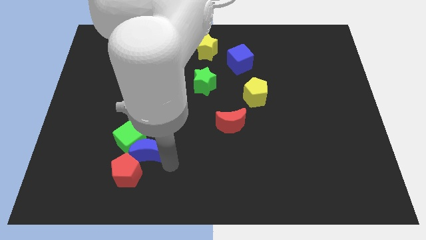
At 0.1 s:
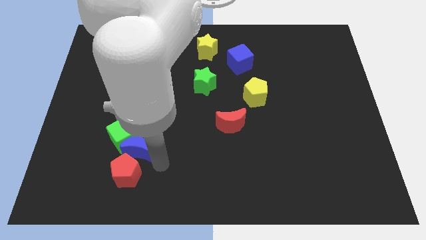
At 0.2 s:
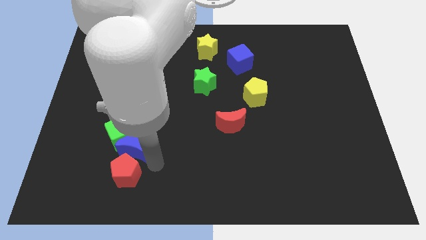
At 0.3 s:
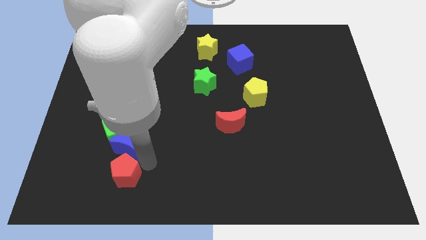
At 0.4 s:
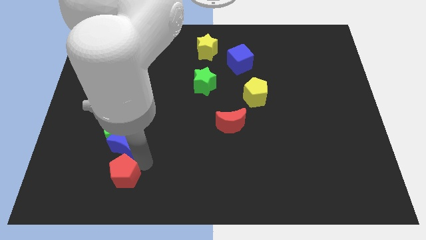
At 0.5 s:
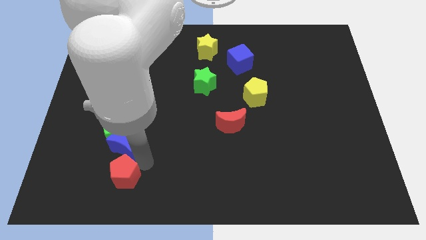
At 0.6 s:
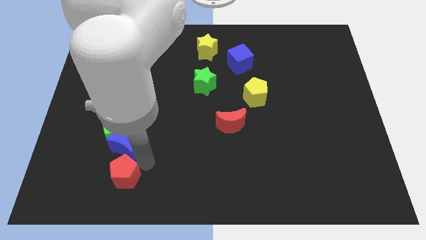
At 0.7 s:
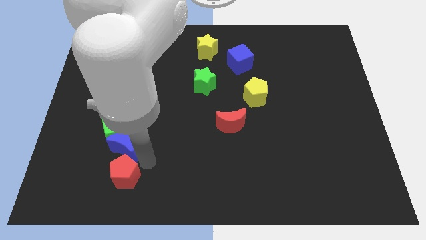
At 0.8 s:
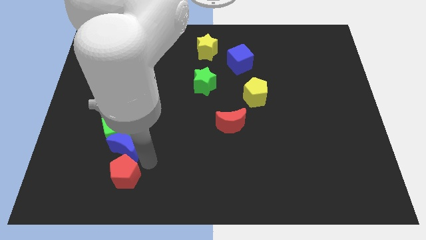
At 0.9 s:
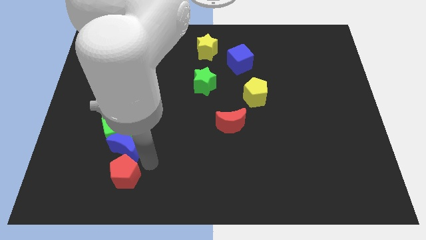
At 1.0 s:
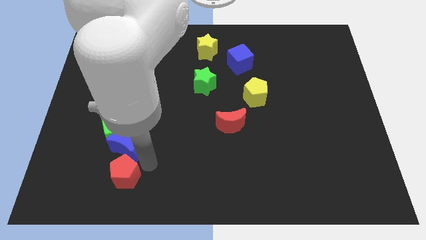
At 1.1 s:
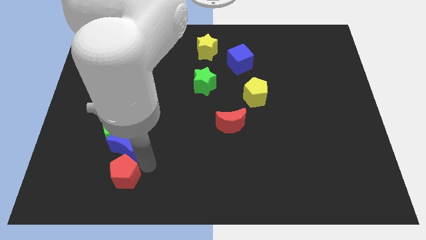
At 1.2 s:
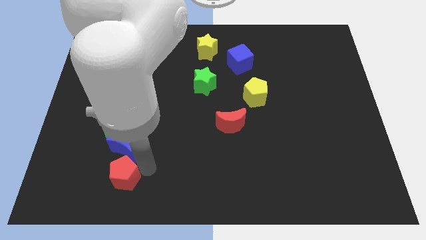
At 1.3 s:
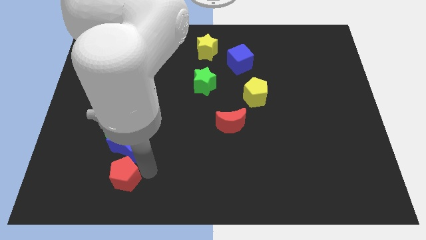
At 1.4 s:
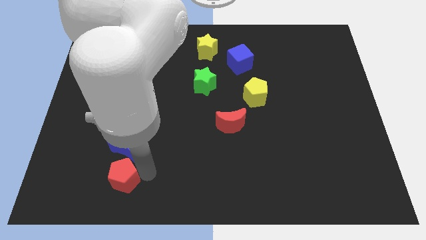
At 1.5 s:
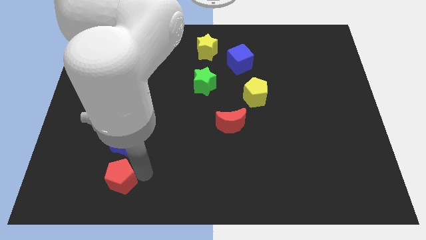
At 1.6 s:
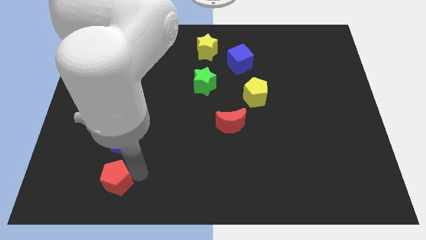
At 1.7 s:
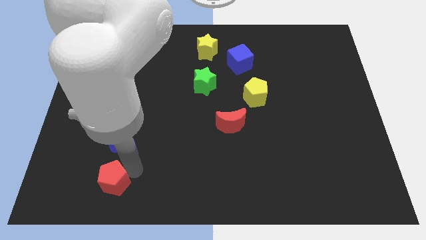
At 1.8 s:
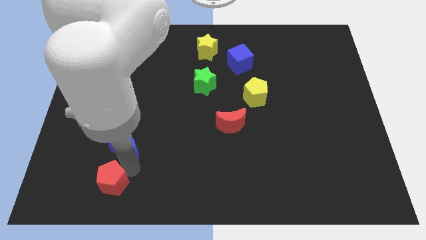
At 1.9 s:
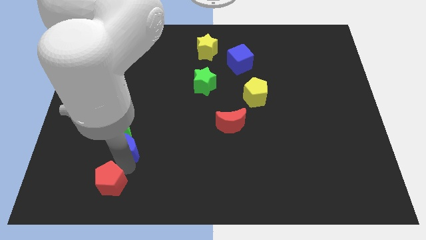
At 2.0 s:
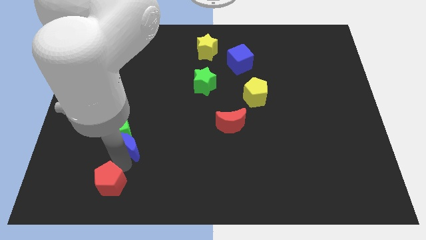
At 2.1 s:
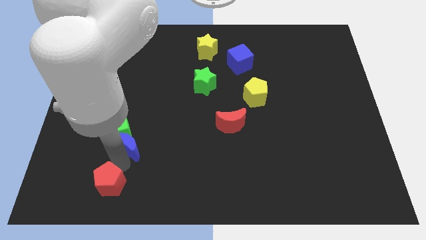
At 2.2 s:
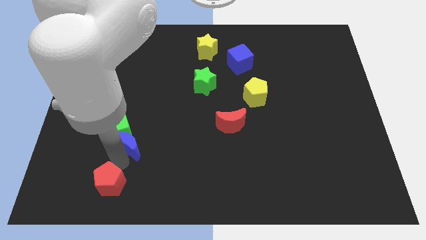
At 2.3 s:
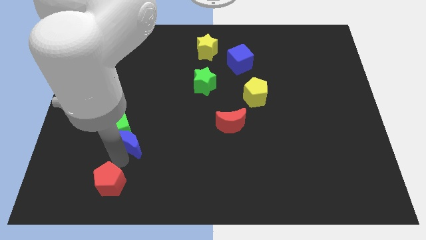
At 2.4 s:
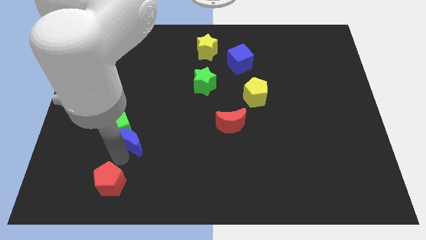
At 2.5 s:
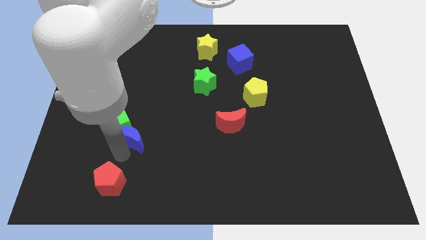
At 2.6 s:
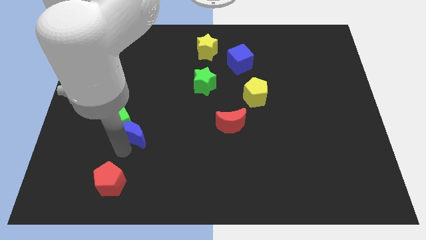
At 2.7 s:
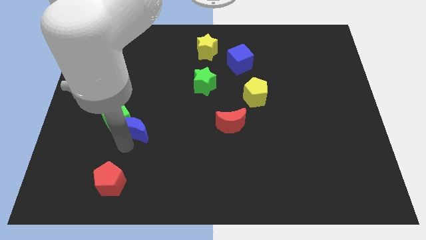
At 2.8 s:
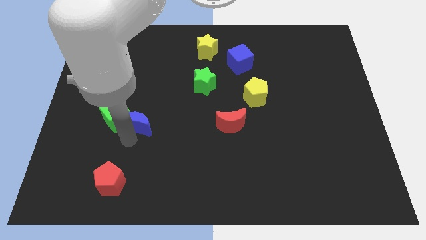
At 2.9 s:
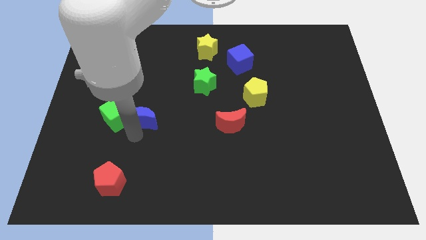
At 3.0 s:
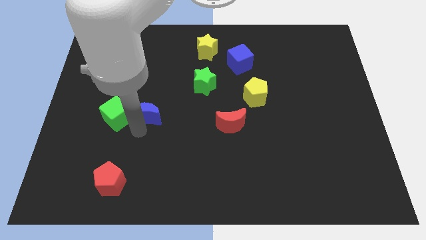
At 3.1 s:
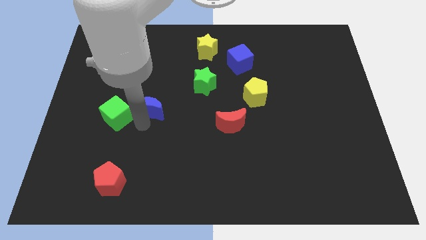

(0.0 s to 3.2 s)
push blue crescent upwards

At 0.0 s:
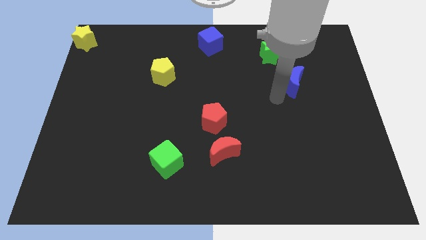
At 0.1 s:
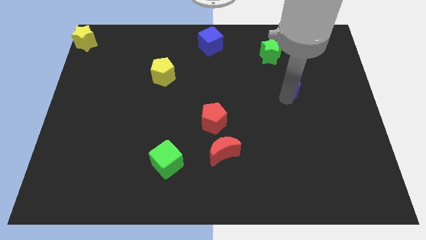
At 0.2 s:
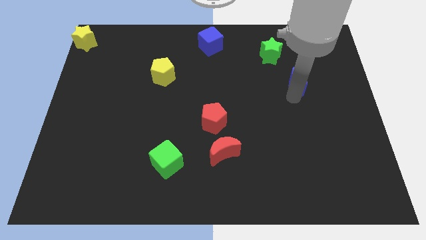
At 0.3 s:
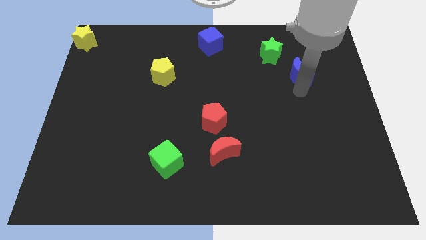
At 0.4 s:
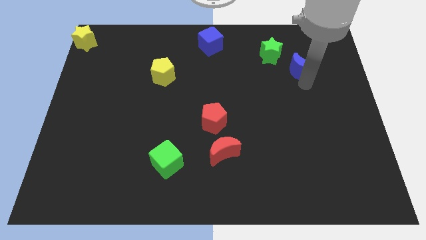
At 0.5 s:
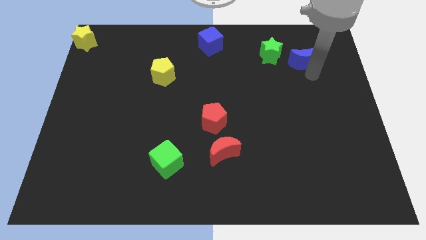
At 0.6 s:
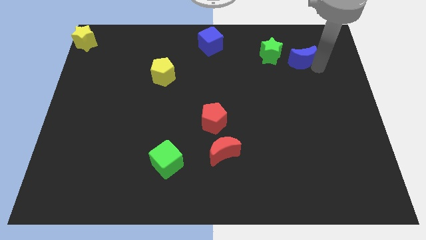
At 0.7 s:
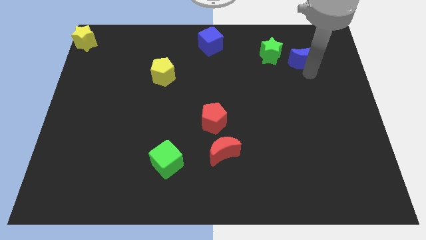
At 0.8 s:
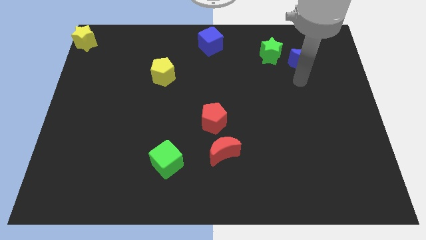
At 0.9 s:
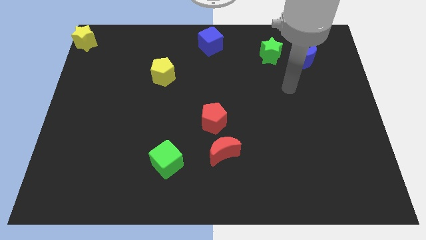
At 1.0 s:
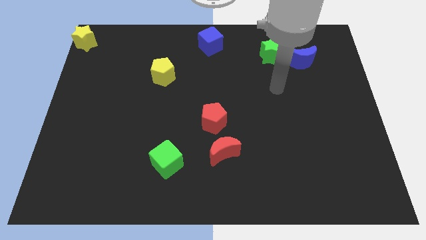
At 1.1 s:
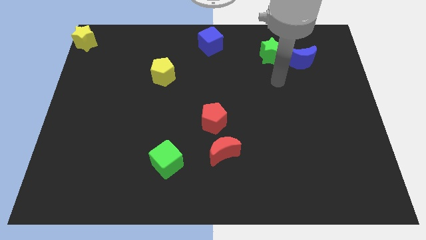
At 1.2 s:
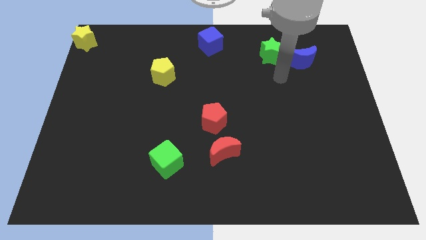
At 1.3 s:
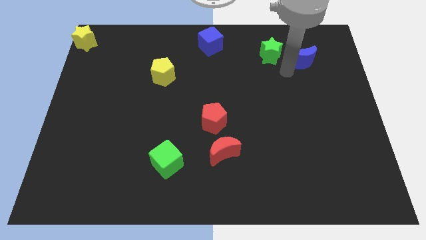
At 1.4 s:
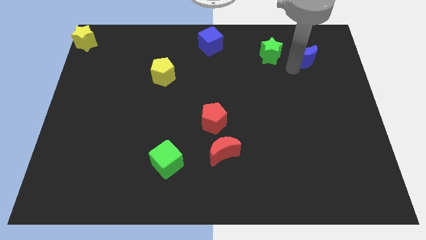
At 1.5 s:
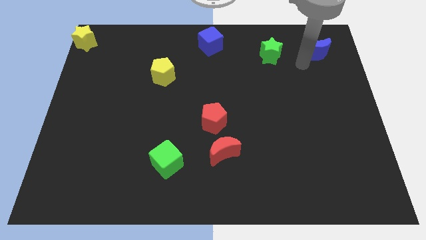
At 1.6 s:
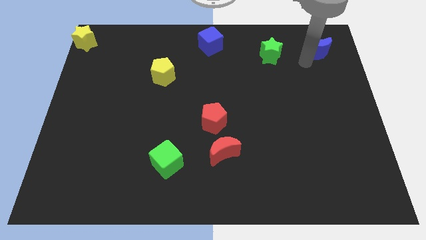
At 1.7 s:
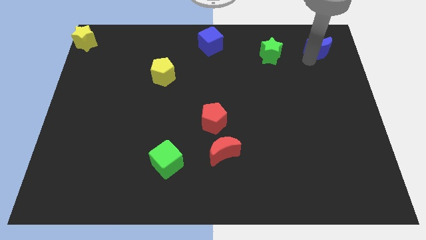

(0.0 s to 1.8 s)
push the blue crescent to the right of the green star

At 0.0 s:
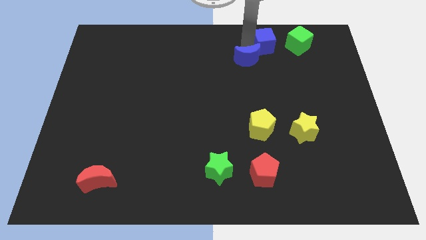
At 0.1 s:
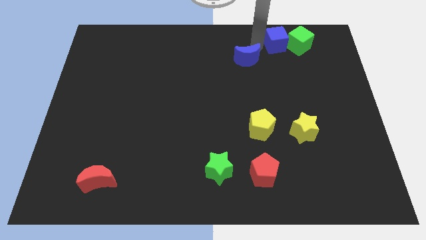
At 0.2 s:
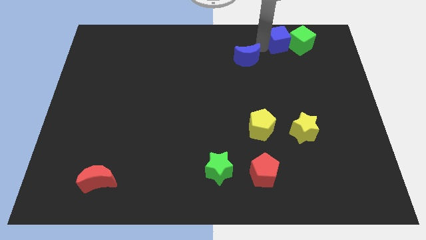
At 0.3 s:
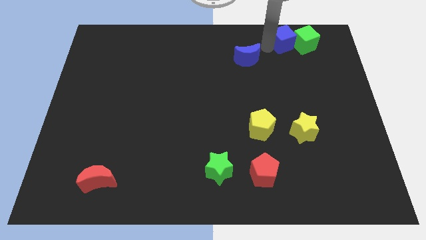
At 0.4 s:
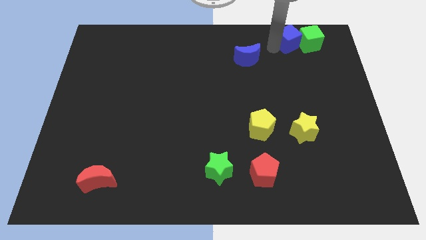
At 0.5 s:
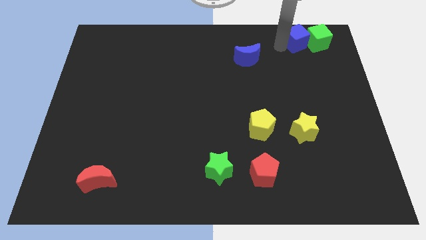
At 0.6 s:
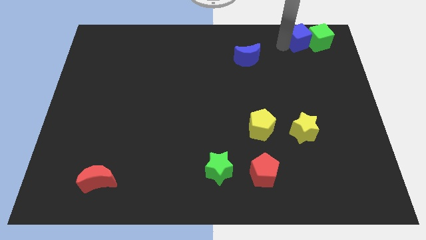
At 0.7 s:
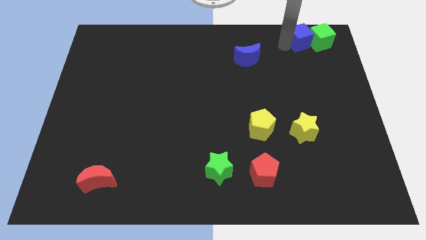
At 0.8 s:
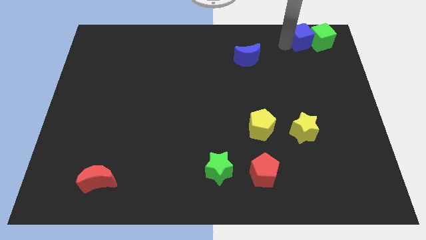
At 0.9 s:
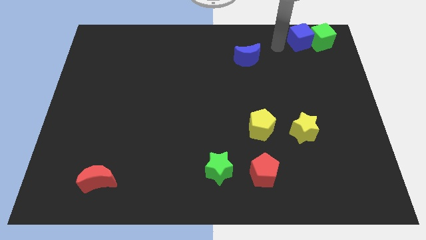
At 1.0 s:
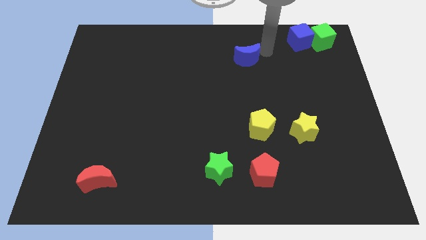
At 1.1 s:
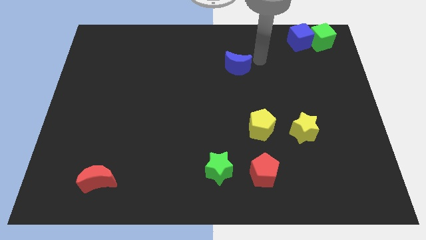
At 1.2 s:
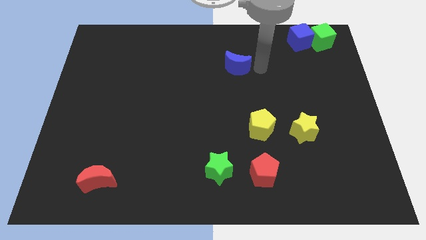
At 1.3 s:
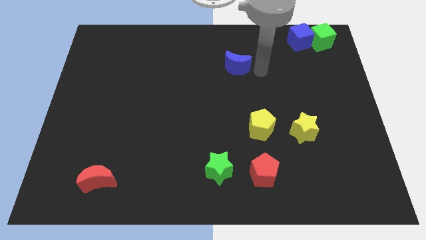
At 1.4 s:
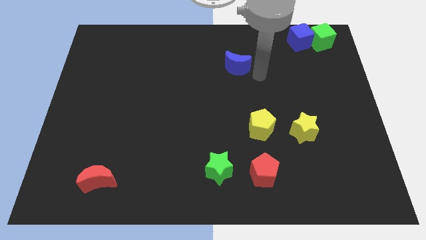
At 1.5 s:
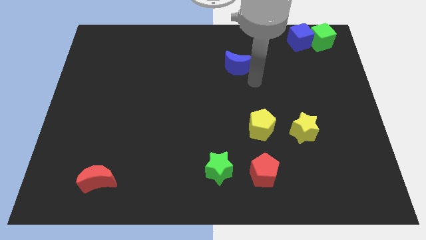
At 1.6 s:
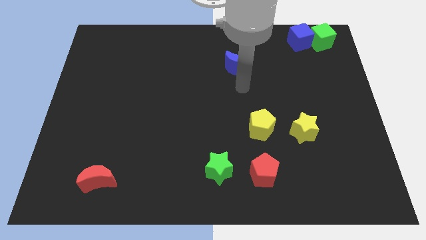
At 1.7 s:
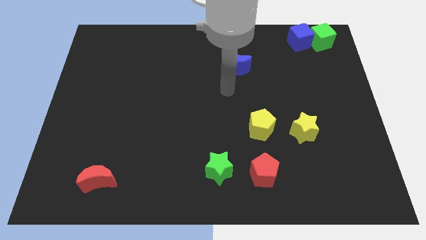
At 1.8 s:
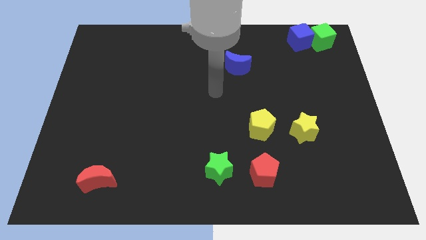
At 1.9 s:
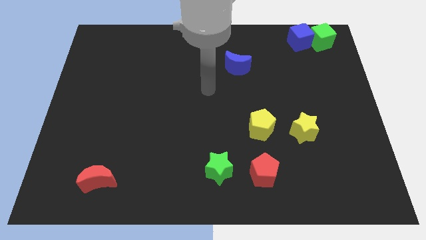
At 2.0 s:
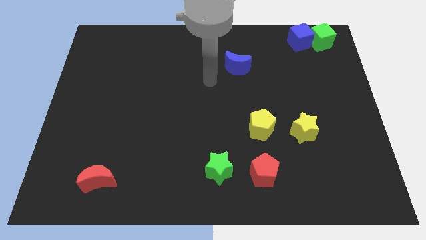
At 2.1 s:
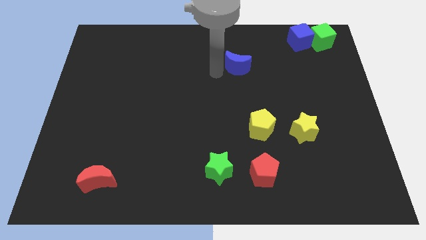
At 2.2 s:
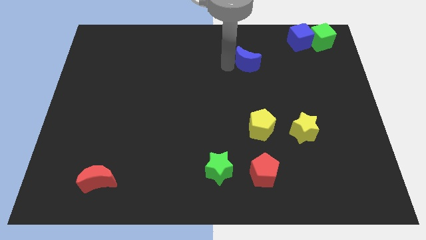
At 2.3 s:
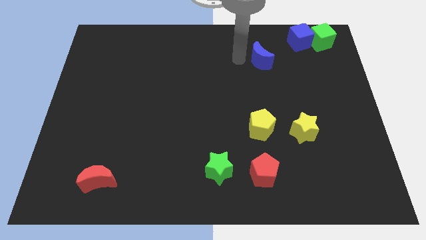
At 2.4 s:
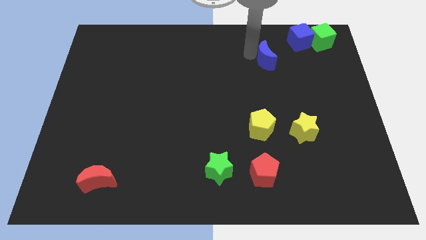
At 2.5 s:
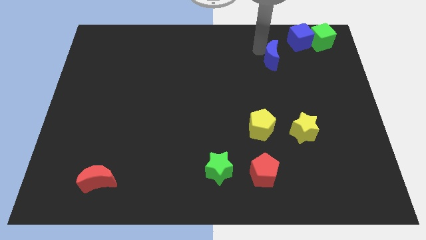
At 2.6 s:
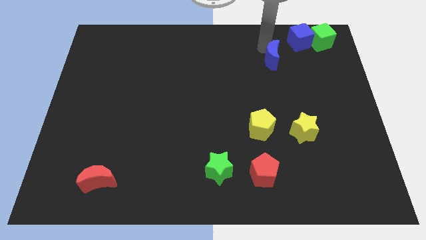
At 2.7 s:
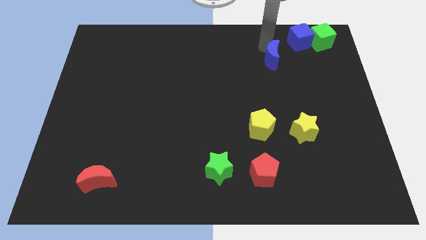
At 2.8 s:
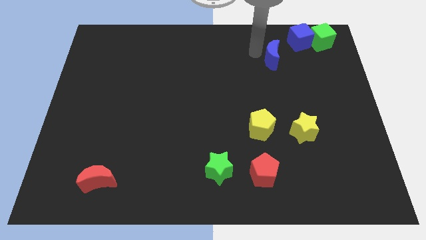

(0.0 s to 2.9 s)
push the blue cube into the green cube

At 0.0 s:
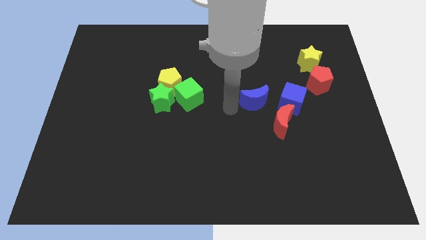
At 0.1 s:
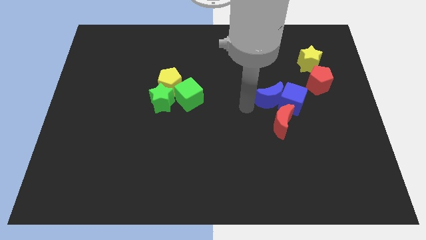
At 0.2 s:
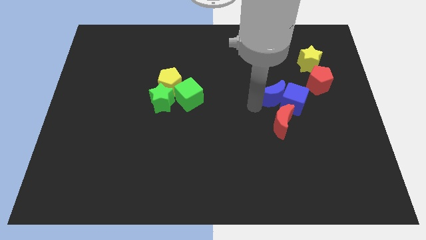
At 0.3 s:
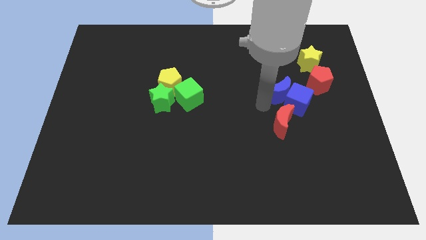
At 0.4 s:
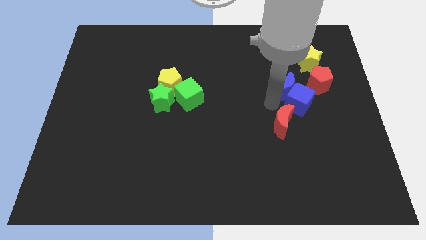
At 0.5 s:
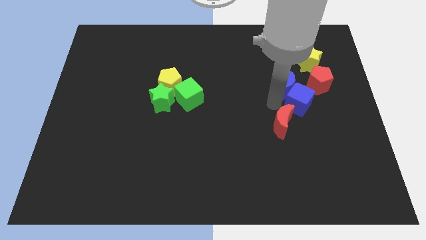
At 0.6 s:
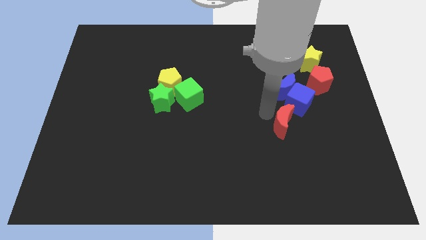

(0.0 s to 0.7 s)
push blue blocks slightly right

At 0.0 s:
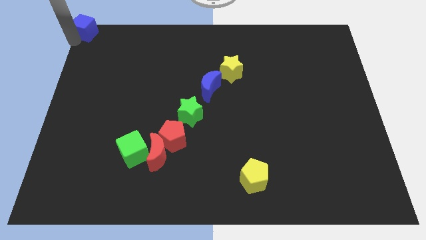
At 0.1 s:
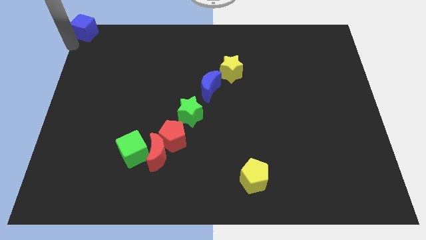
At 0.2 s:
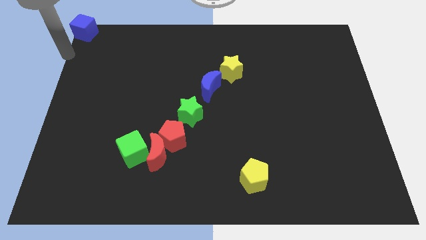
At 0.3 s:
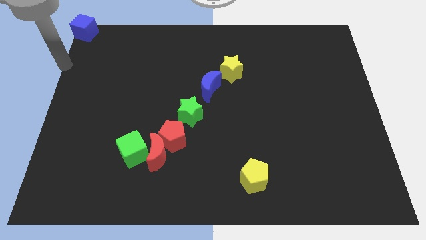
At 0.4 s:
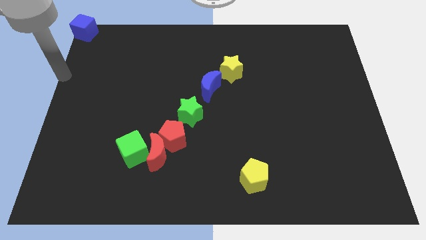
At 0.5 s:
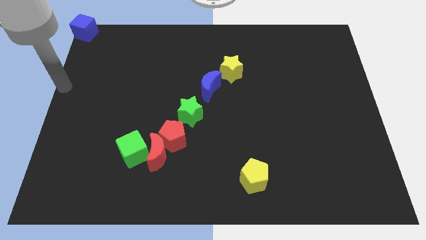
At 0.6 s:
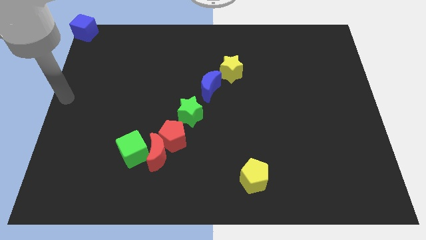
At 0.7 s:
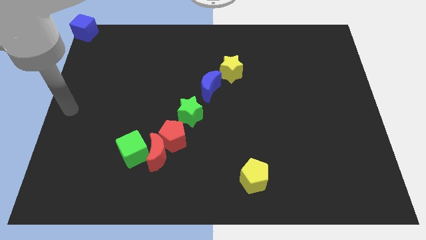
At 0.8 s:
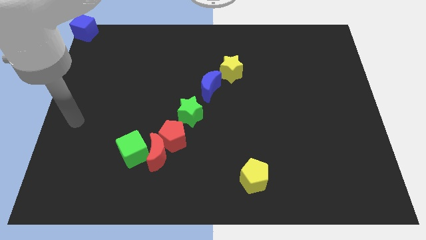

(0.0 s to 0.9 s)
move your arm away from blue cube
